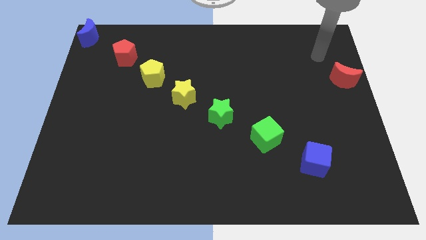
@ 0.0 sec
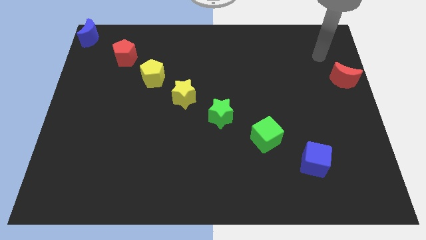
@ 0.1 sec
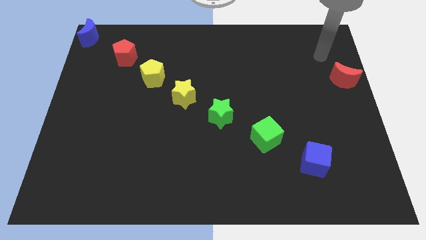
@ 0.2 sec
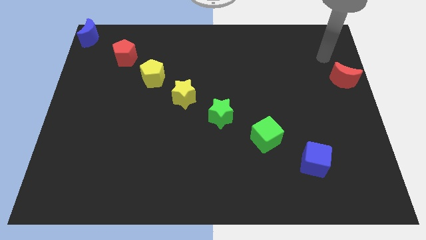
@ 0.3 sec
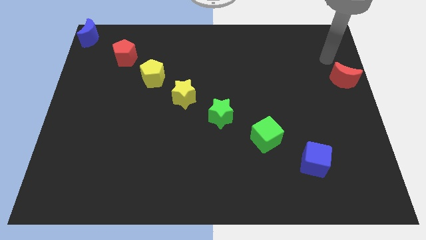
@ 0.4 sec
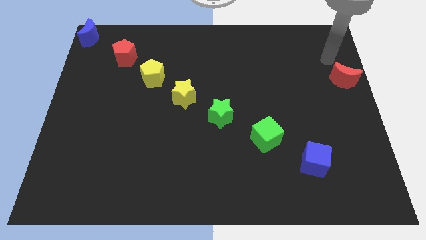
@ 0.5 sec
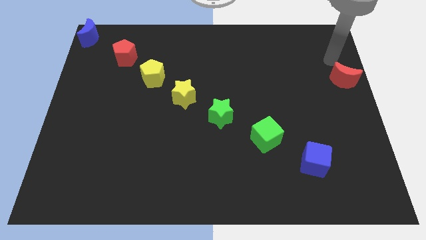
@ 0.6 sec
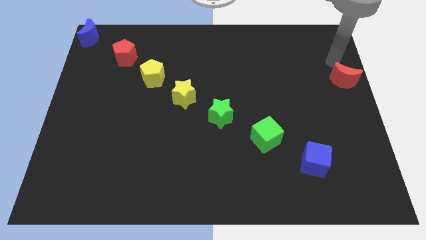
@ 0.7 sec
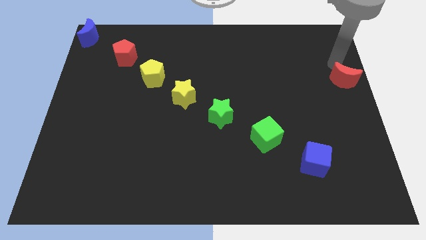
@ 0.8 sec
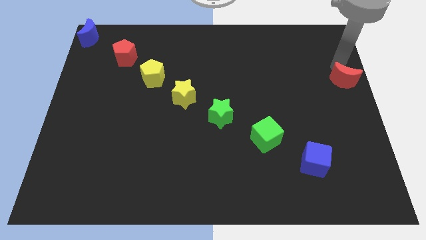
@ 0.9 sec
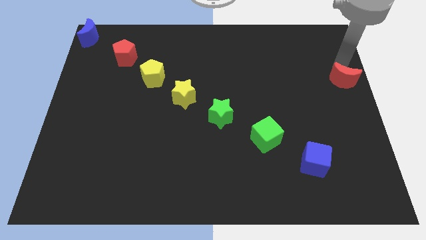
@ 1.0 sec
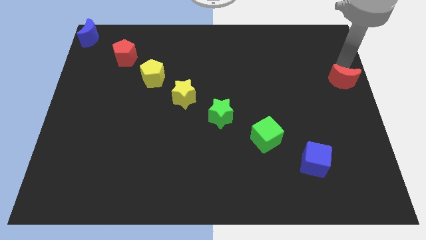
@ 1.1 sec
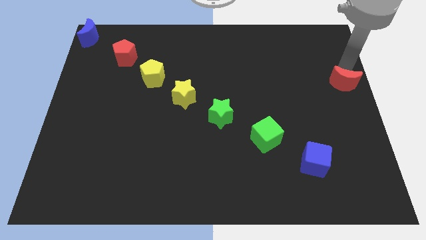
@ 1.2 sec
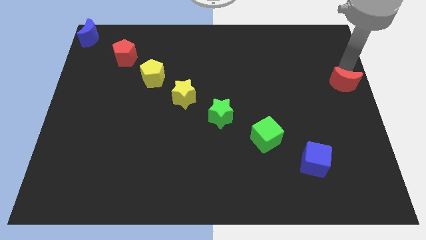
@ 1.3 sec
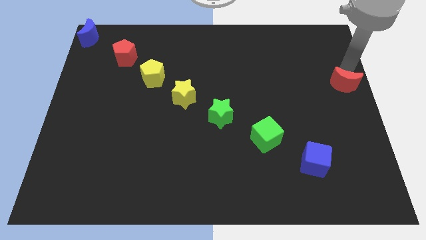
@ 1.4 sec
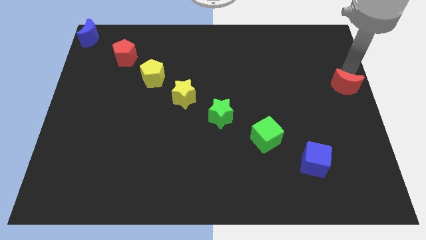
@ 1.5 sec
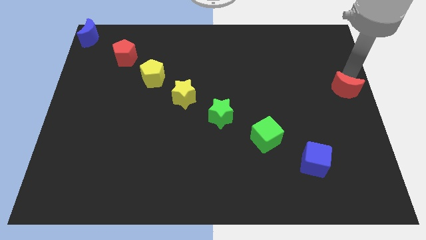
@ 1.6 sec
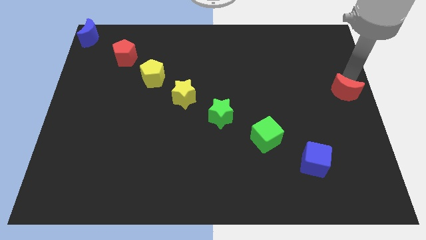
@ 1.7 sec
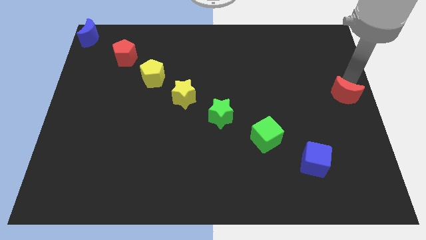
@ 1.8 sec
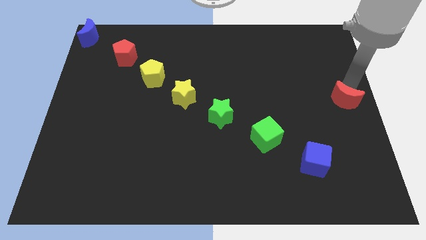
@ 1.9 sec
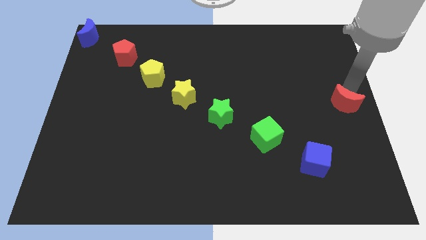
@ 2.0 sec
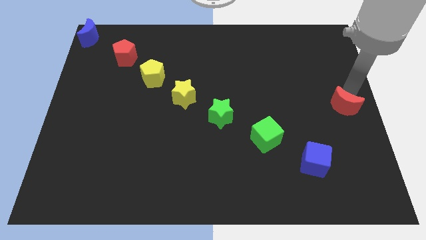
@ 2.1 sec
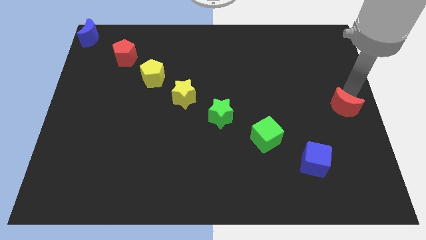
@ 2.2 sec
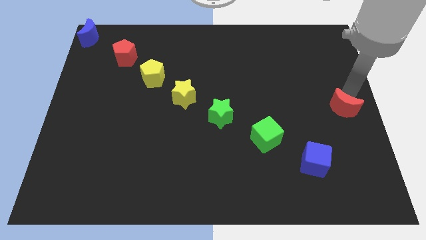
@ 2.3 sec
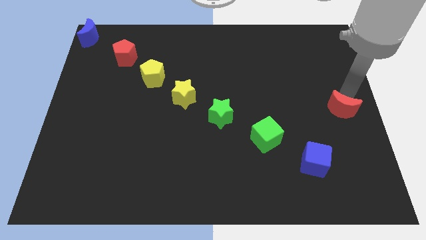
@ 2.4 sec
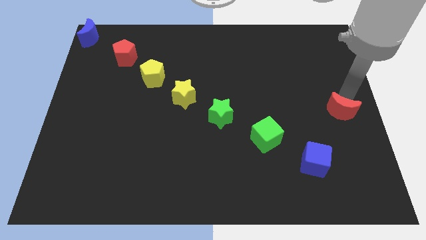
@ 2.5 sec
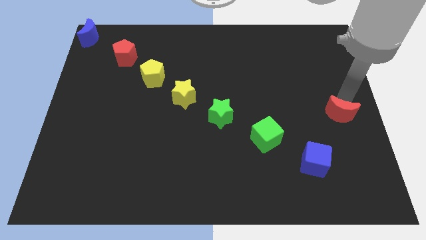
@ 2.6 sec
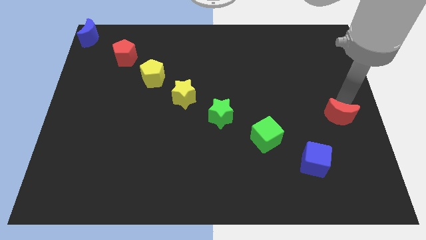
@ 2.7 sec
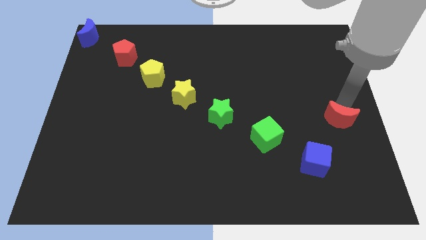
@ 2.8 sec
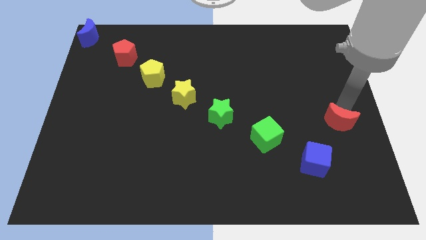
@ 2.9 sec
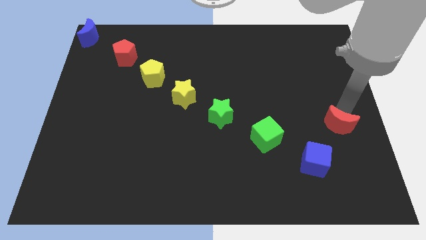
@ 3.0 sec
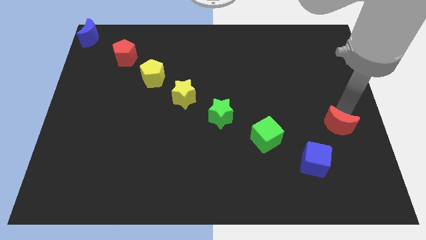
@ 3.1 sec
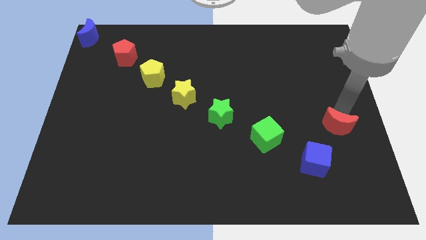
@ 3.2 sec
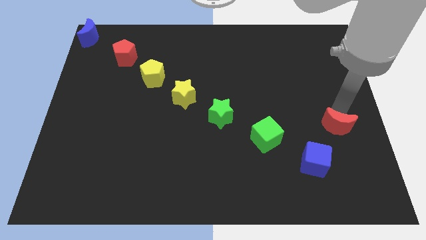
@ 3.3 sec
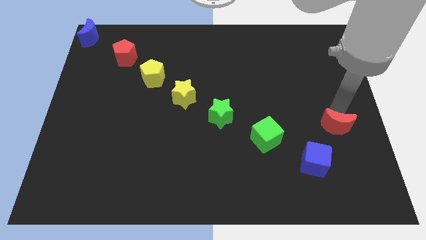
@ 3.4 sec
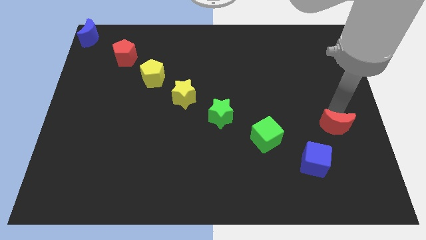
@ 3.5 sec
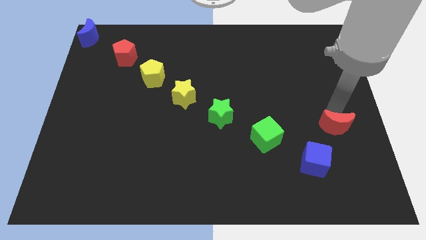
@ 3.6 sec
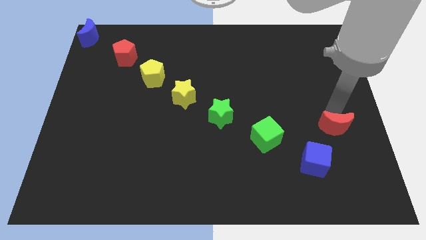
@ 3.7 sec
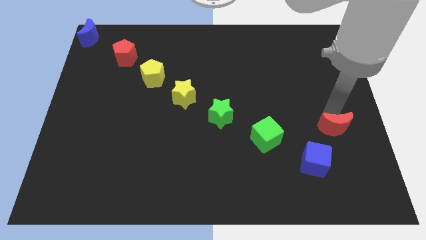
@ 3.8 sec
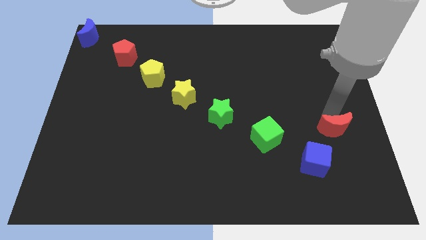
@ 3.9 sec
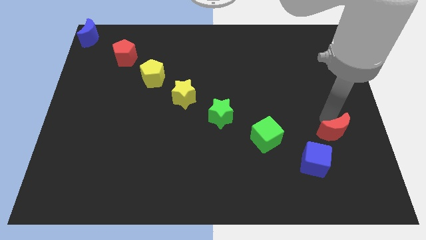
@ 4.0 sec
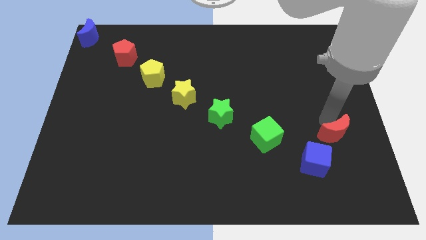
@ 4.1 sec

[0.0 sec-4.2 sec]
push red moon towards blue cube

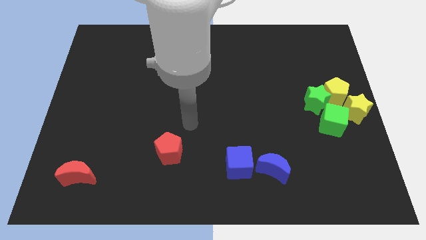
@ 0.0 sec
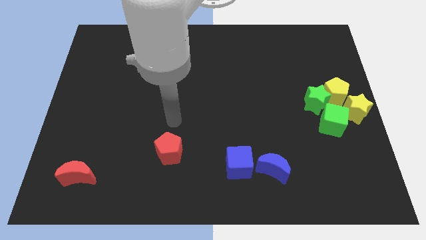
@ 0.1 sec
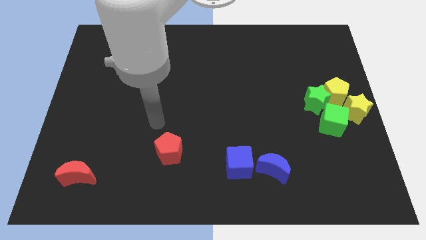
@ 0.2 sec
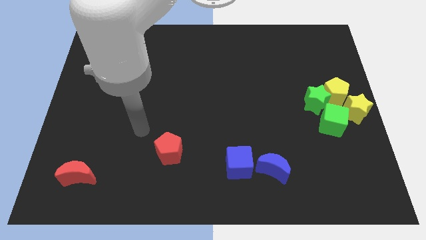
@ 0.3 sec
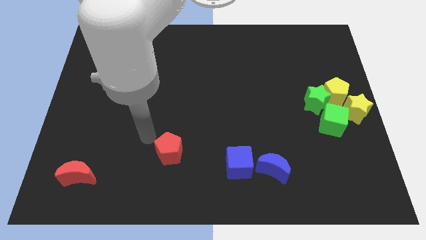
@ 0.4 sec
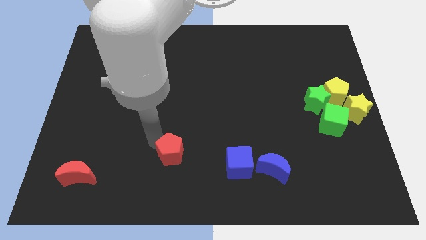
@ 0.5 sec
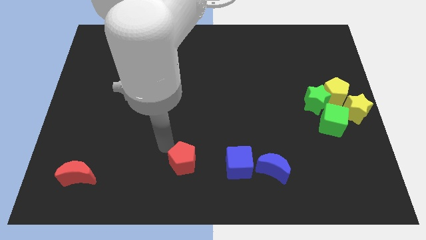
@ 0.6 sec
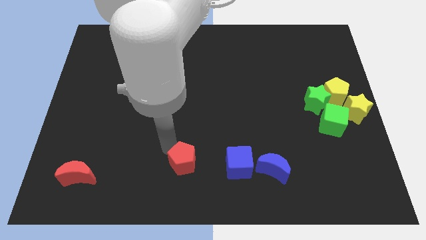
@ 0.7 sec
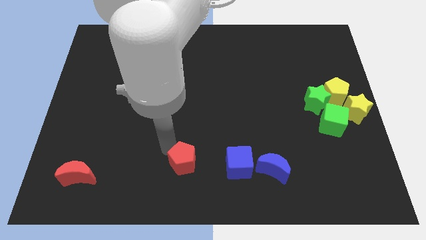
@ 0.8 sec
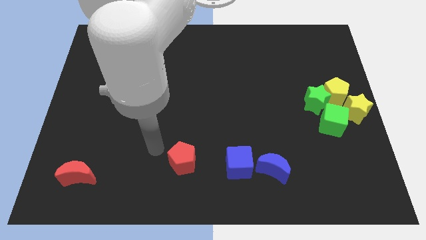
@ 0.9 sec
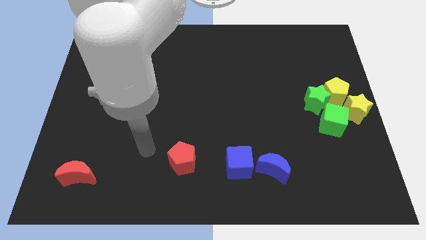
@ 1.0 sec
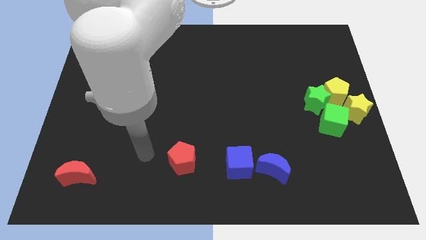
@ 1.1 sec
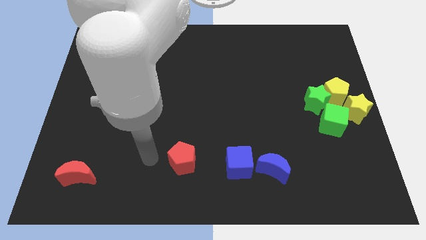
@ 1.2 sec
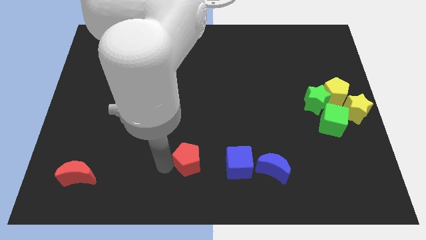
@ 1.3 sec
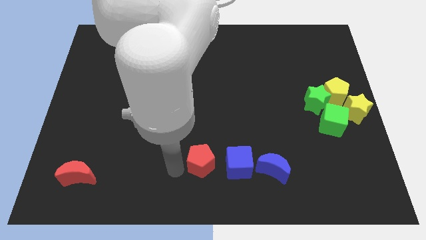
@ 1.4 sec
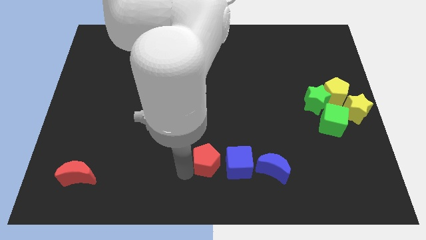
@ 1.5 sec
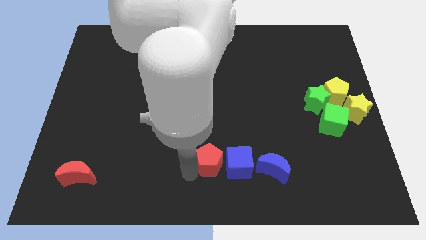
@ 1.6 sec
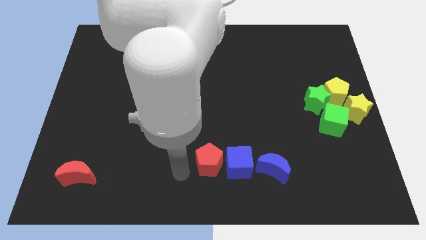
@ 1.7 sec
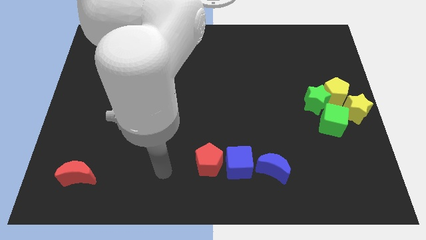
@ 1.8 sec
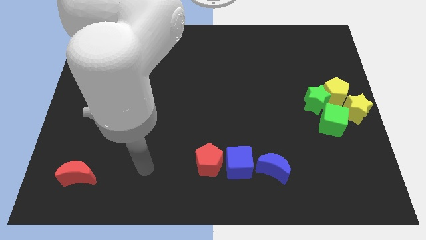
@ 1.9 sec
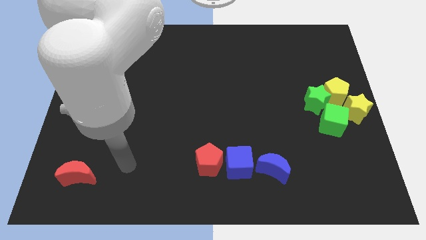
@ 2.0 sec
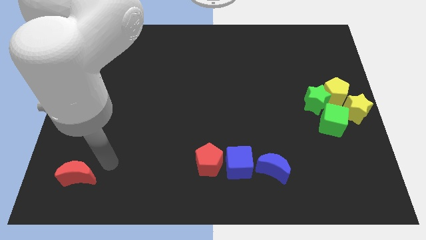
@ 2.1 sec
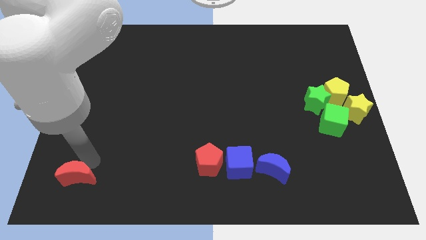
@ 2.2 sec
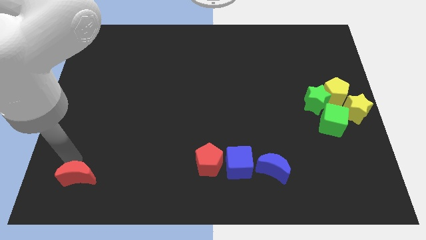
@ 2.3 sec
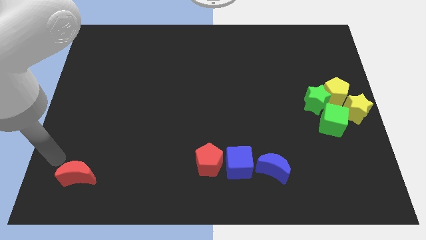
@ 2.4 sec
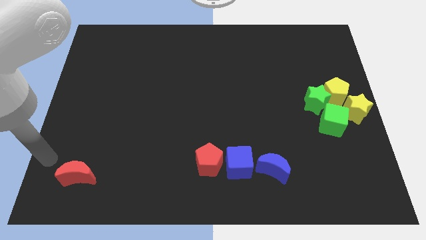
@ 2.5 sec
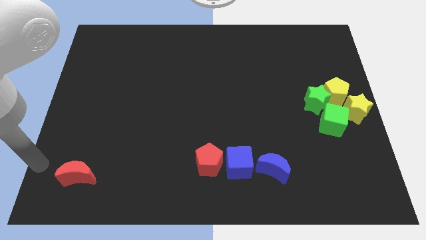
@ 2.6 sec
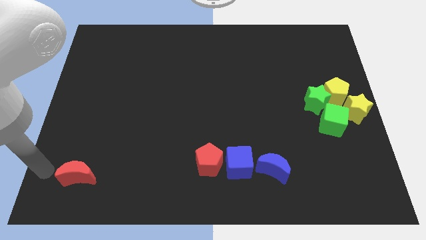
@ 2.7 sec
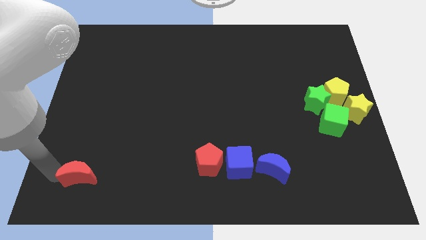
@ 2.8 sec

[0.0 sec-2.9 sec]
move red pentagon left to blue cube

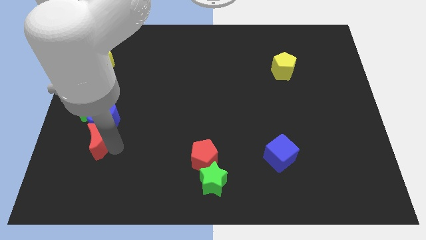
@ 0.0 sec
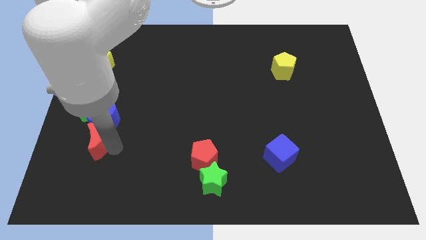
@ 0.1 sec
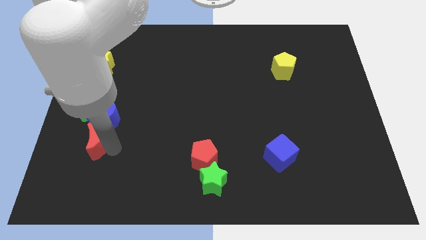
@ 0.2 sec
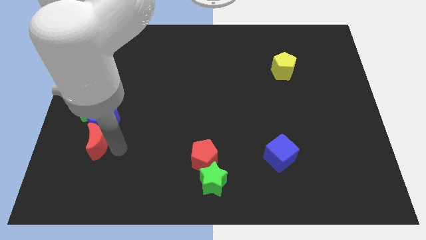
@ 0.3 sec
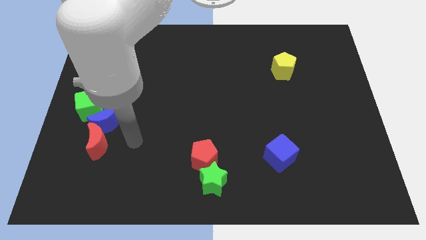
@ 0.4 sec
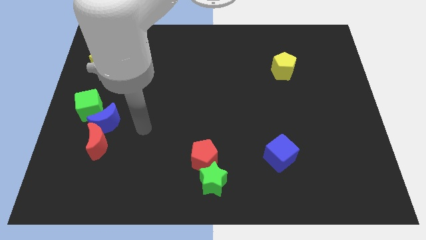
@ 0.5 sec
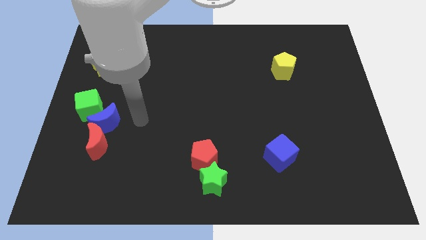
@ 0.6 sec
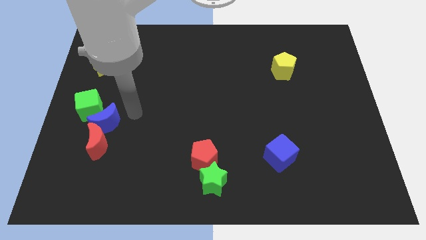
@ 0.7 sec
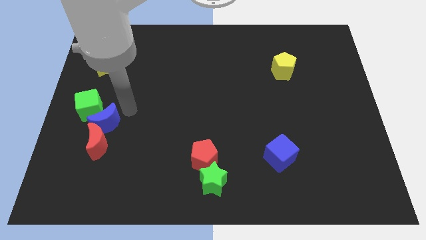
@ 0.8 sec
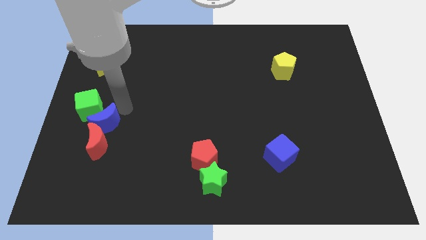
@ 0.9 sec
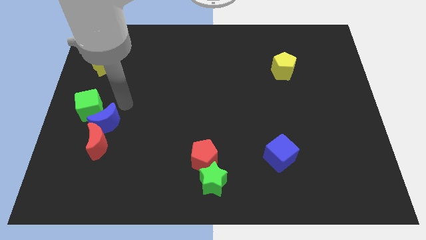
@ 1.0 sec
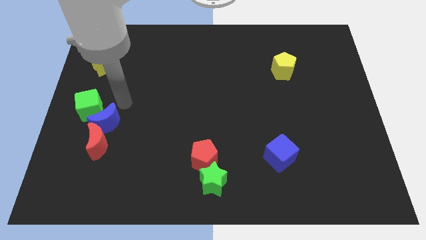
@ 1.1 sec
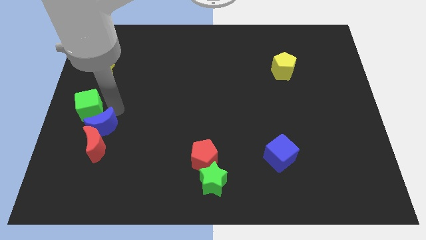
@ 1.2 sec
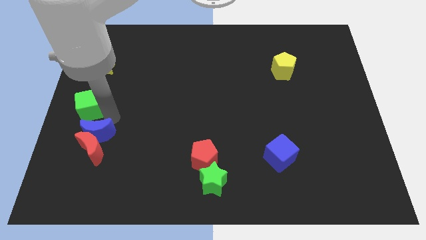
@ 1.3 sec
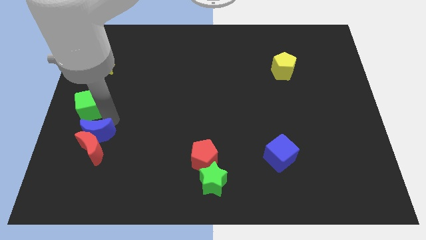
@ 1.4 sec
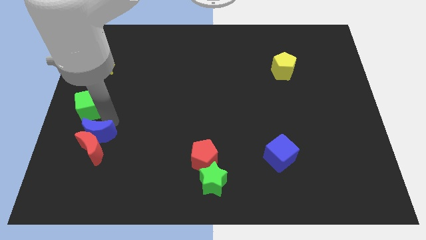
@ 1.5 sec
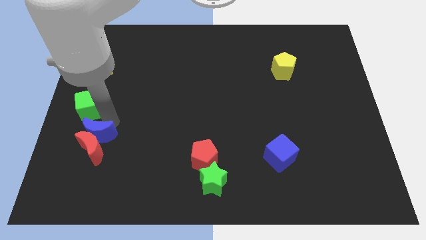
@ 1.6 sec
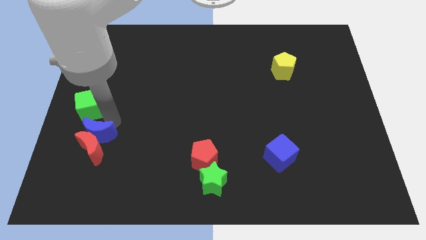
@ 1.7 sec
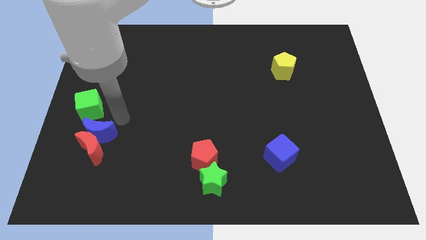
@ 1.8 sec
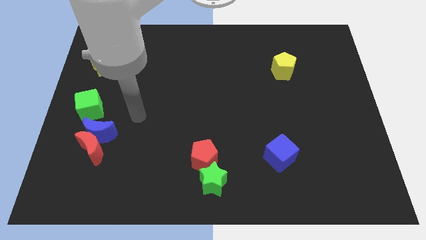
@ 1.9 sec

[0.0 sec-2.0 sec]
move the blue crescent slightly towards bottom
